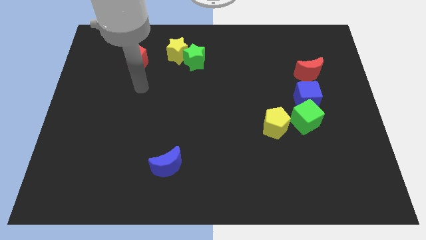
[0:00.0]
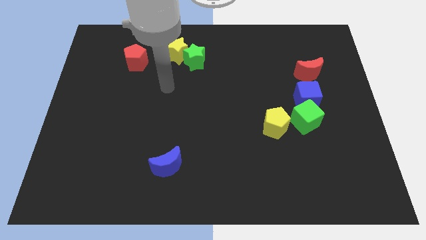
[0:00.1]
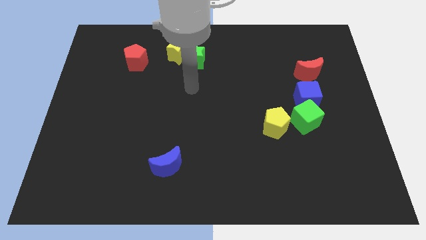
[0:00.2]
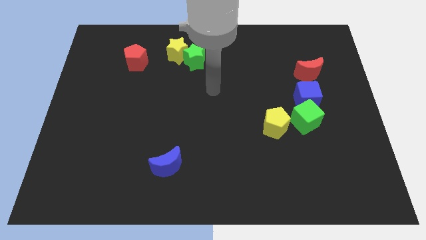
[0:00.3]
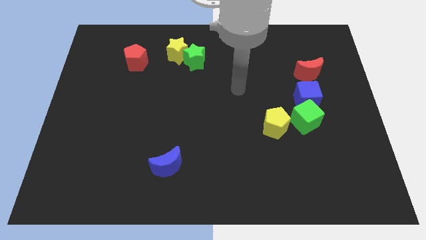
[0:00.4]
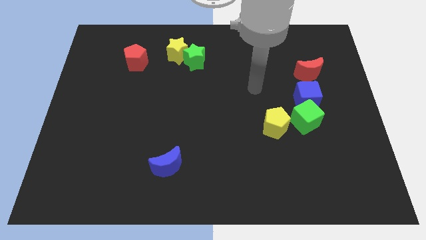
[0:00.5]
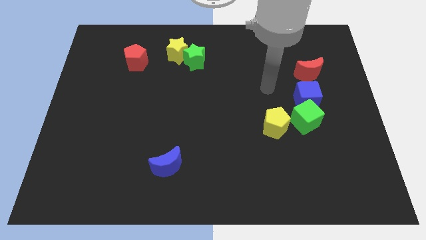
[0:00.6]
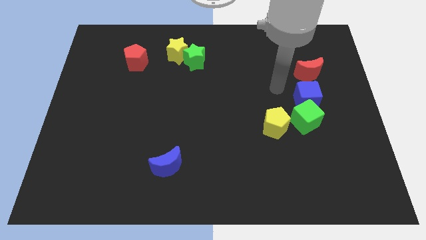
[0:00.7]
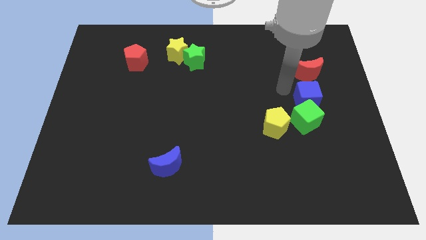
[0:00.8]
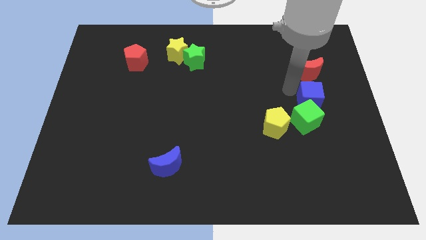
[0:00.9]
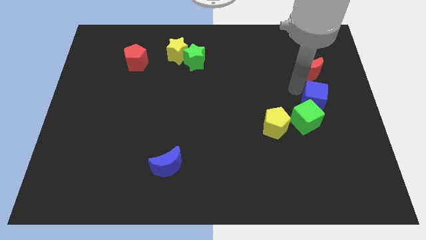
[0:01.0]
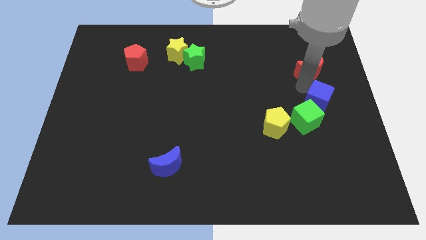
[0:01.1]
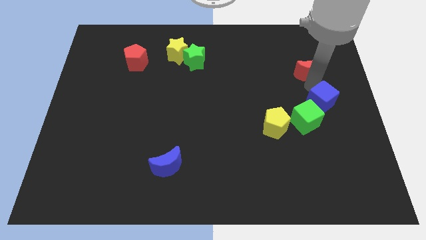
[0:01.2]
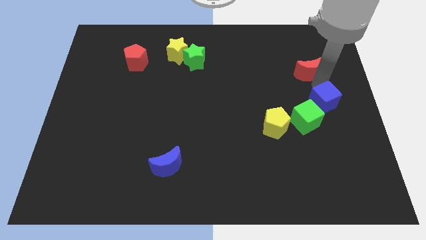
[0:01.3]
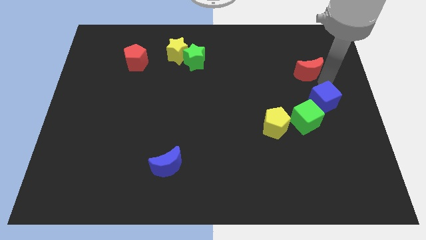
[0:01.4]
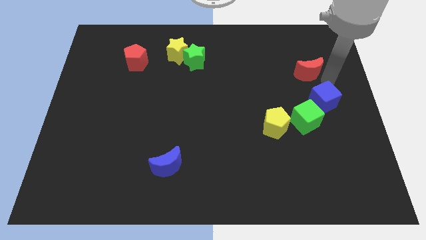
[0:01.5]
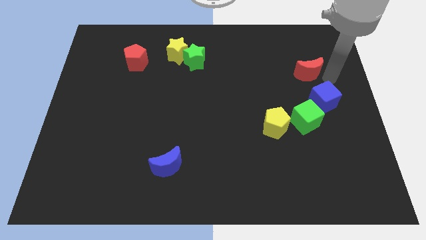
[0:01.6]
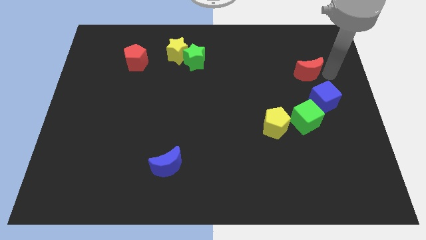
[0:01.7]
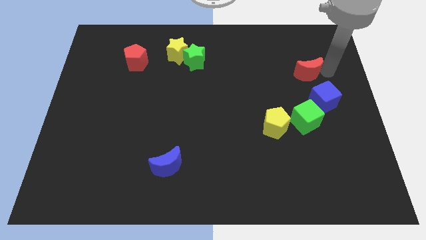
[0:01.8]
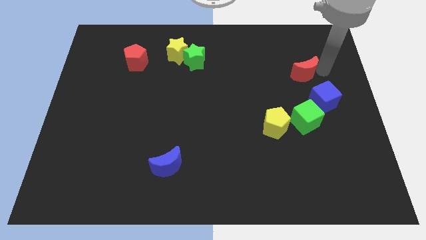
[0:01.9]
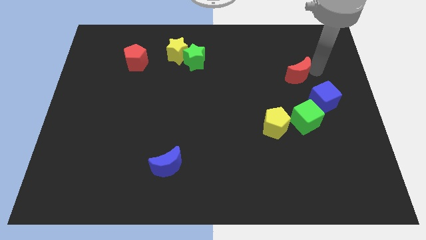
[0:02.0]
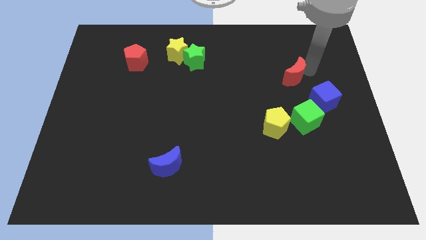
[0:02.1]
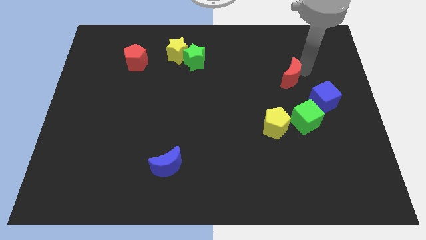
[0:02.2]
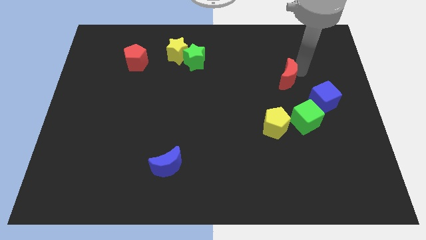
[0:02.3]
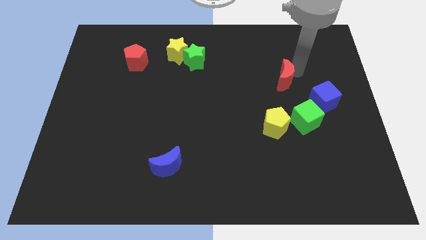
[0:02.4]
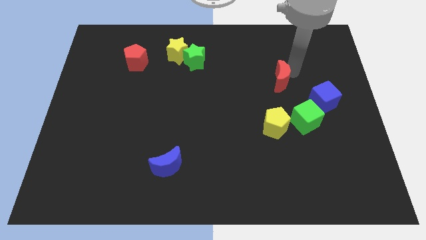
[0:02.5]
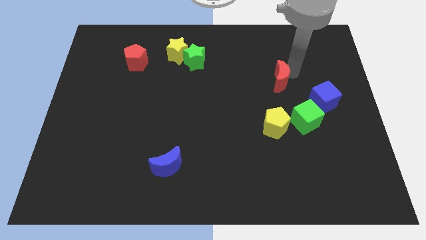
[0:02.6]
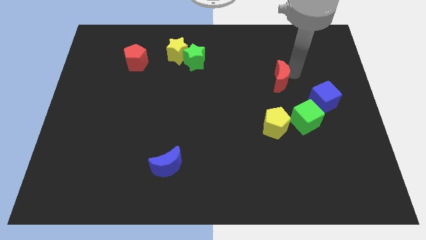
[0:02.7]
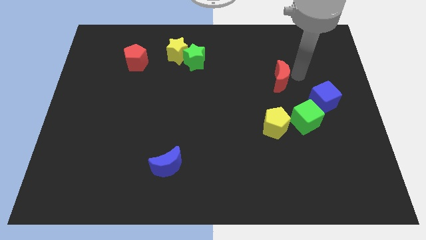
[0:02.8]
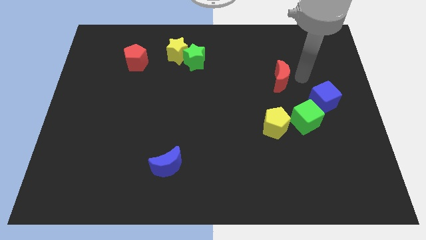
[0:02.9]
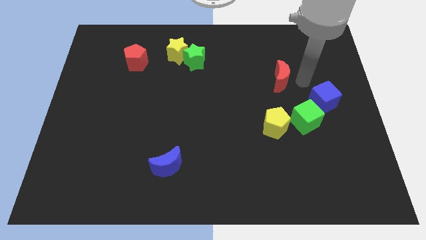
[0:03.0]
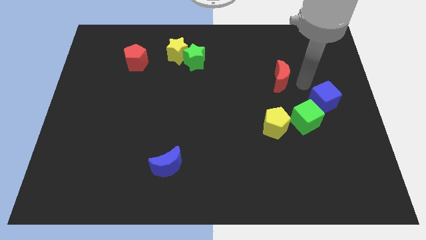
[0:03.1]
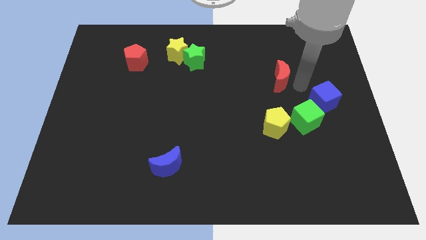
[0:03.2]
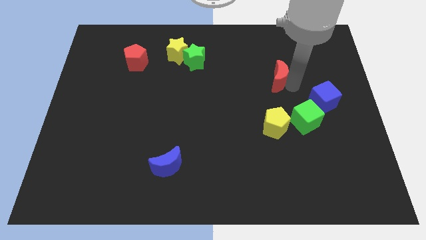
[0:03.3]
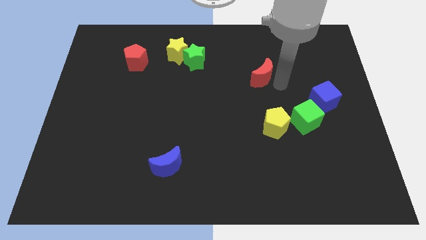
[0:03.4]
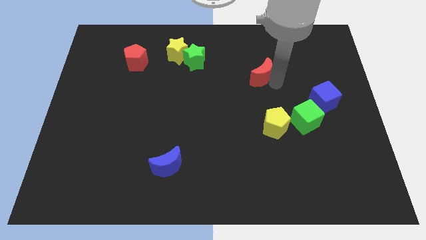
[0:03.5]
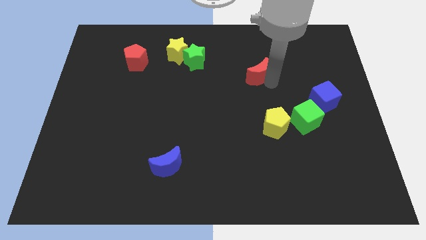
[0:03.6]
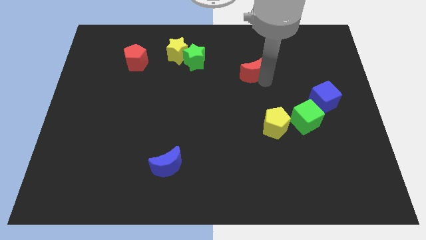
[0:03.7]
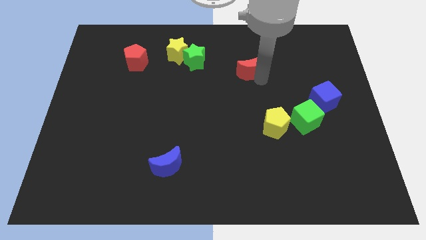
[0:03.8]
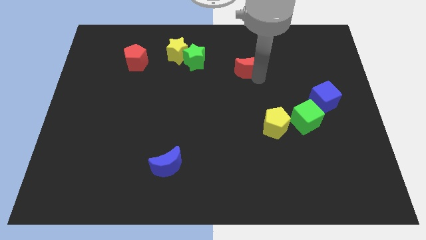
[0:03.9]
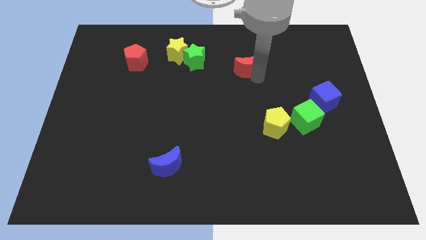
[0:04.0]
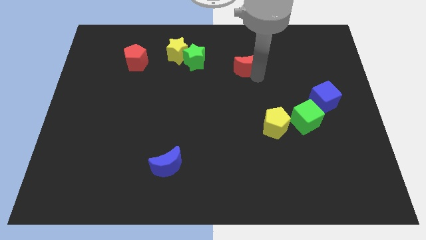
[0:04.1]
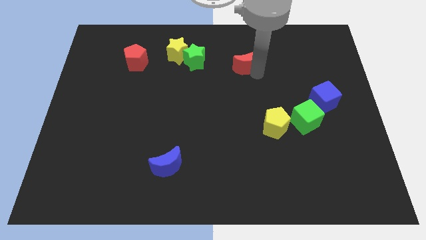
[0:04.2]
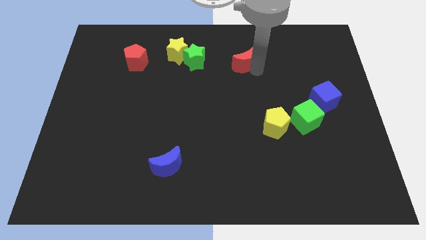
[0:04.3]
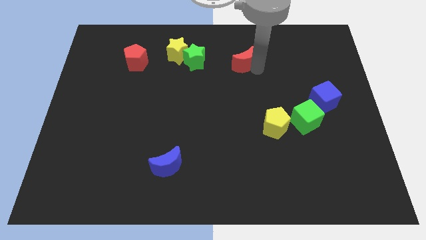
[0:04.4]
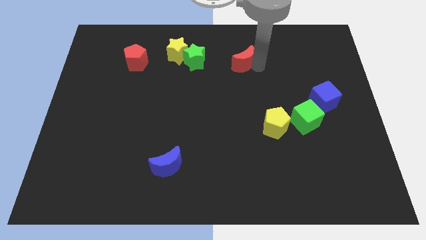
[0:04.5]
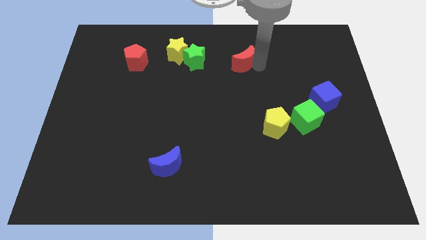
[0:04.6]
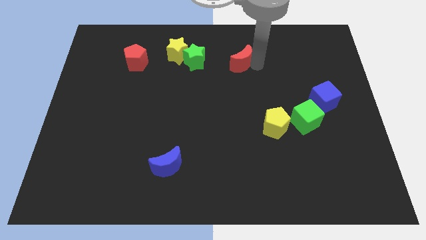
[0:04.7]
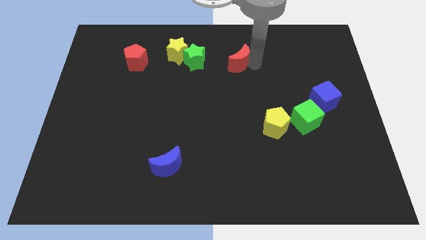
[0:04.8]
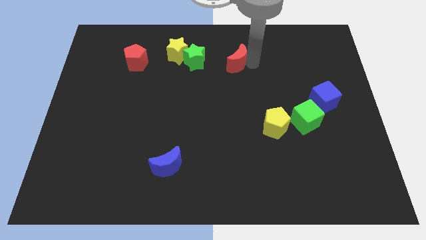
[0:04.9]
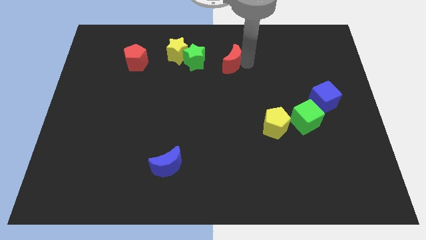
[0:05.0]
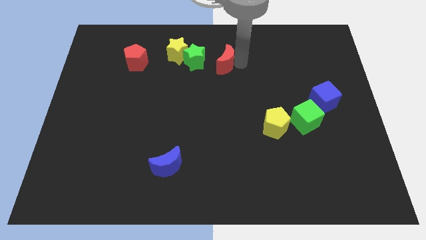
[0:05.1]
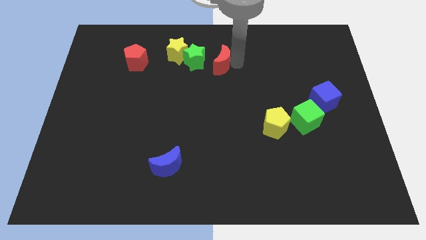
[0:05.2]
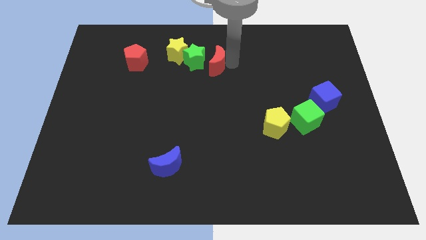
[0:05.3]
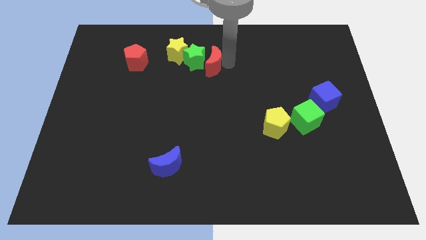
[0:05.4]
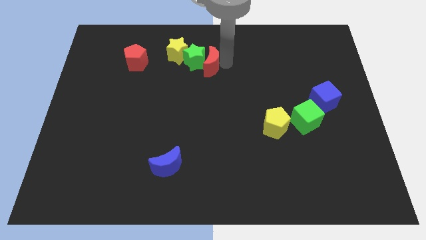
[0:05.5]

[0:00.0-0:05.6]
put the red moon towards the green star

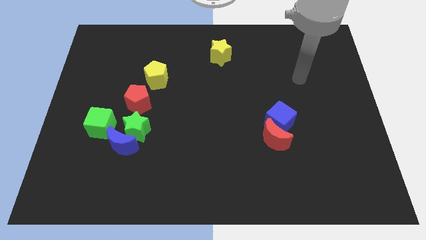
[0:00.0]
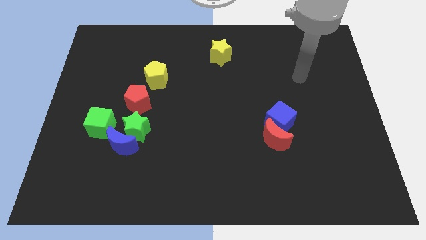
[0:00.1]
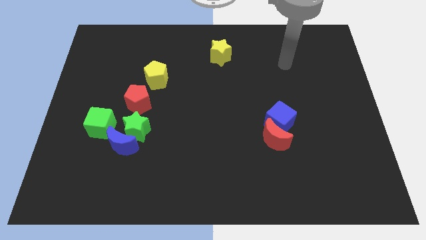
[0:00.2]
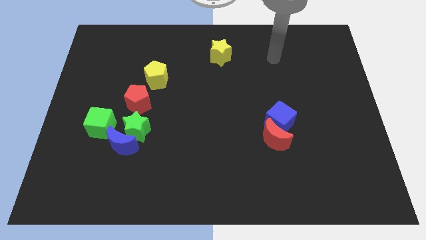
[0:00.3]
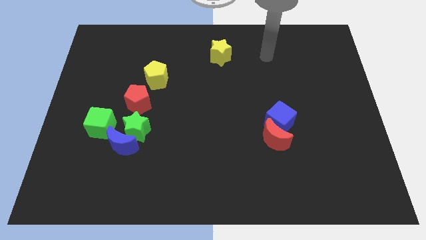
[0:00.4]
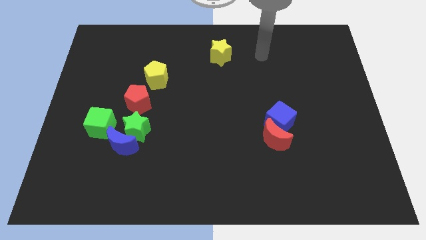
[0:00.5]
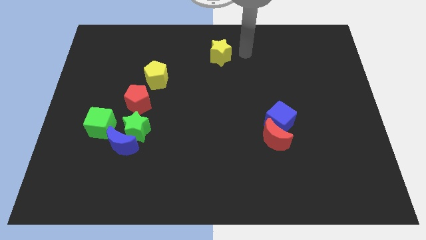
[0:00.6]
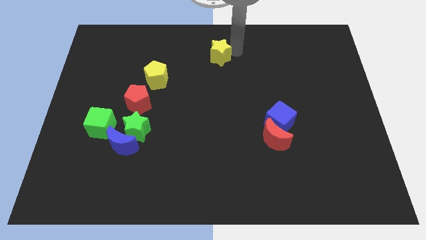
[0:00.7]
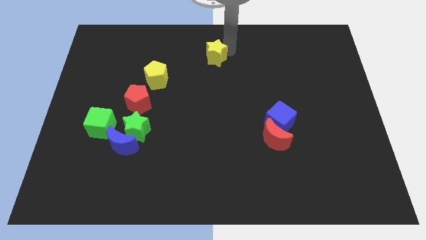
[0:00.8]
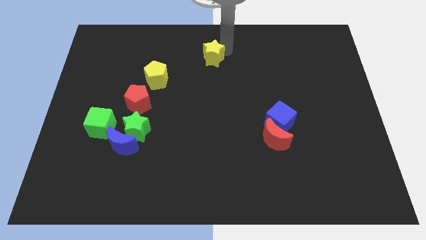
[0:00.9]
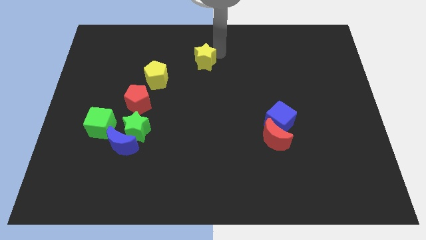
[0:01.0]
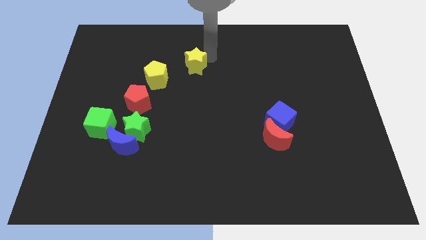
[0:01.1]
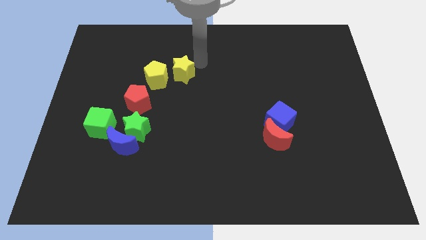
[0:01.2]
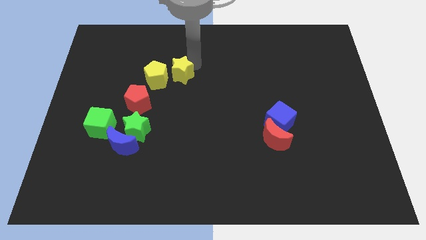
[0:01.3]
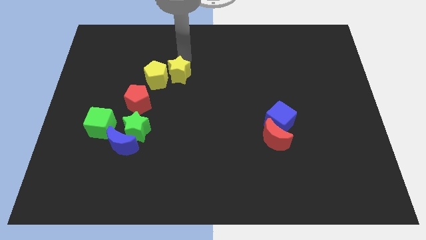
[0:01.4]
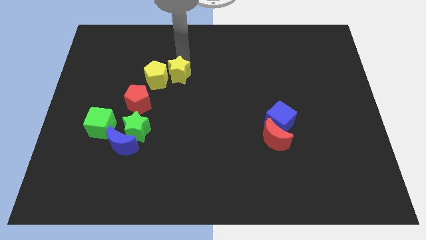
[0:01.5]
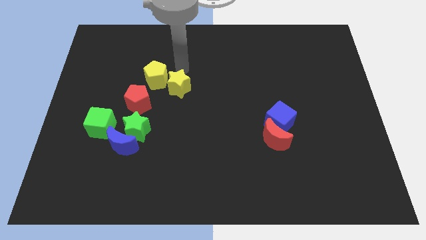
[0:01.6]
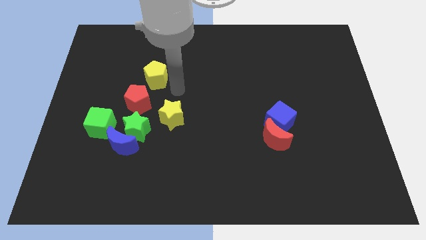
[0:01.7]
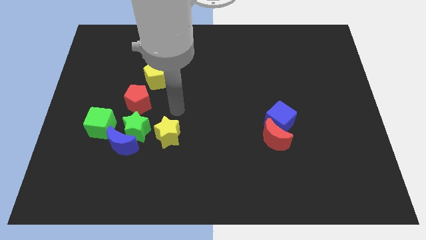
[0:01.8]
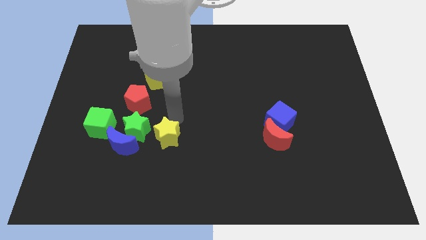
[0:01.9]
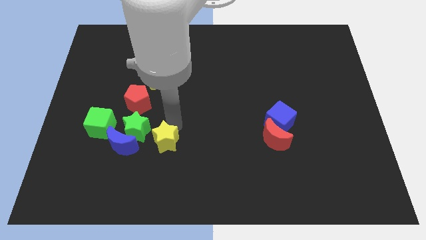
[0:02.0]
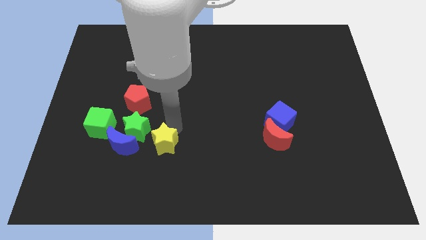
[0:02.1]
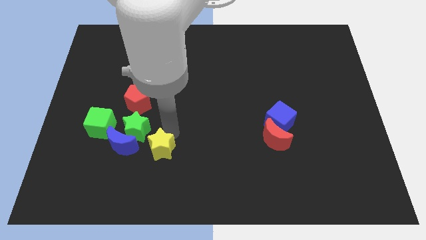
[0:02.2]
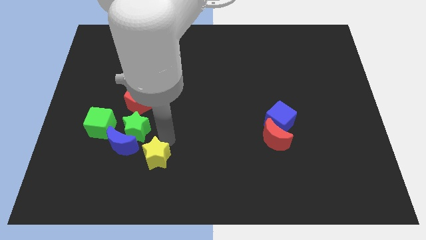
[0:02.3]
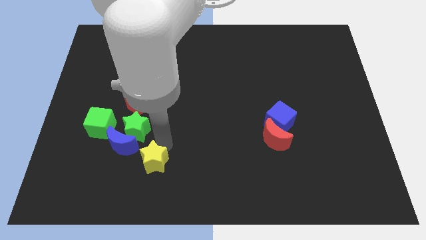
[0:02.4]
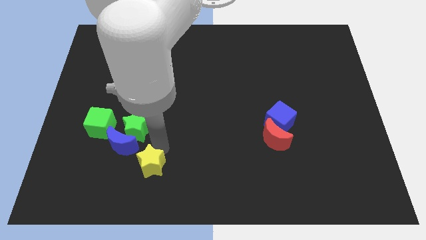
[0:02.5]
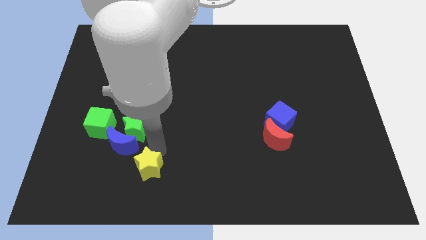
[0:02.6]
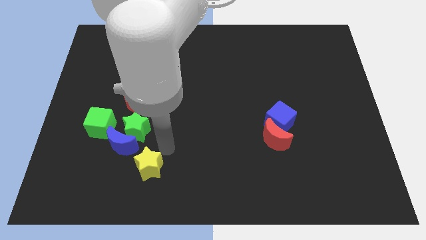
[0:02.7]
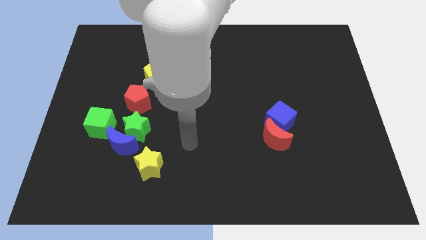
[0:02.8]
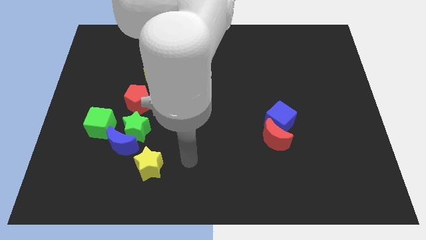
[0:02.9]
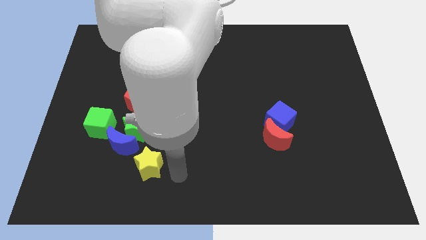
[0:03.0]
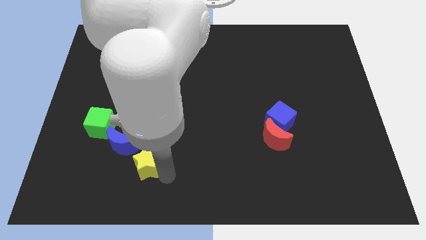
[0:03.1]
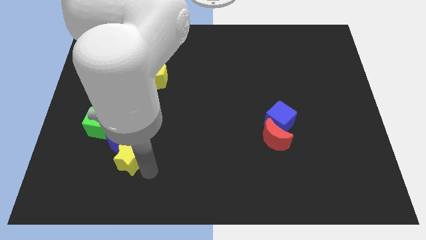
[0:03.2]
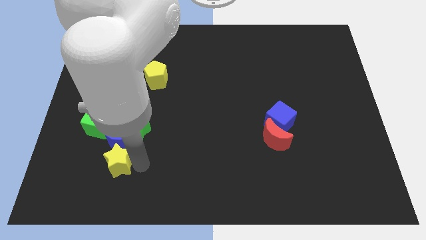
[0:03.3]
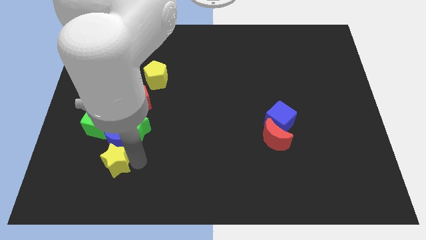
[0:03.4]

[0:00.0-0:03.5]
put the yellow star next to the blue moon
